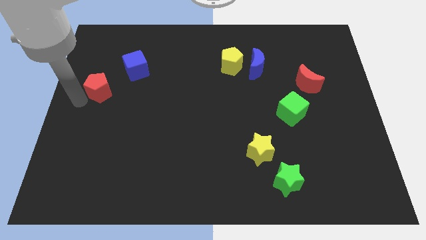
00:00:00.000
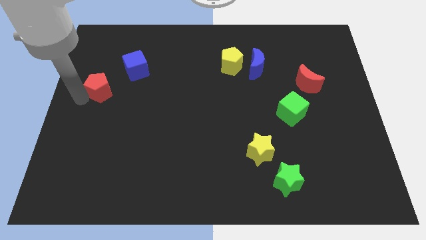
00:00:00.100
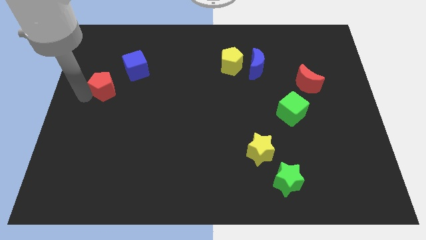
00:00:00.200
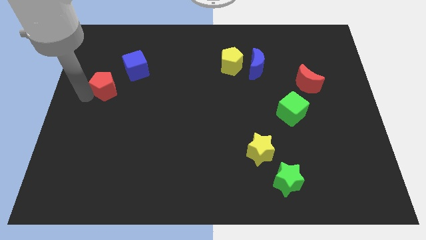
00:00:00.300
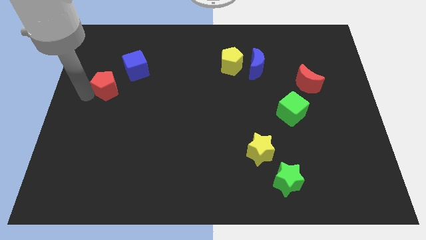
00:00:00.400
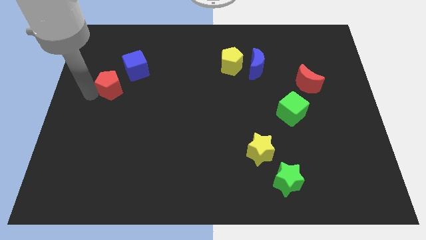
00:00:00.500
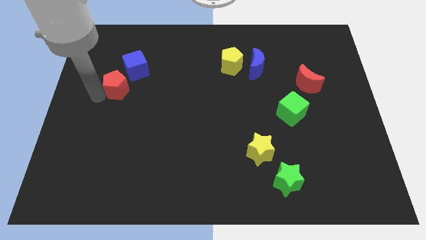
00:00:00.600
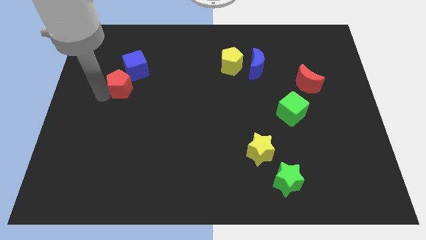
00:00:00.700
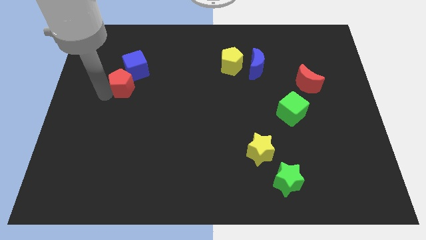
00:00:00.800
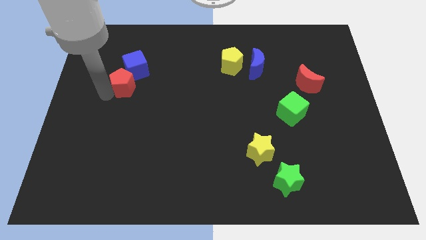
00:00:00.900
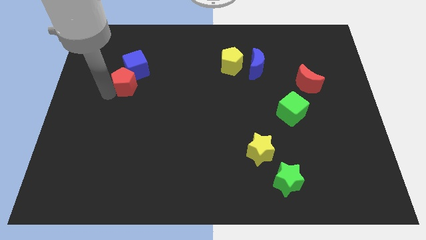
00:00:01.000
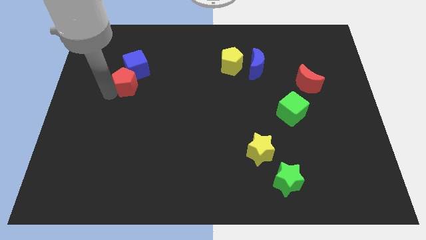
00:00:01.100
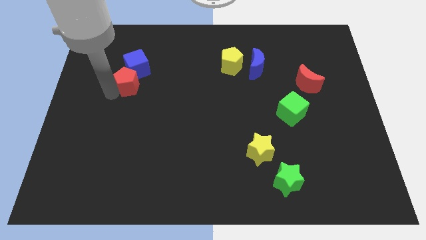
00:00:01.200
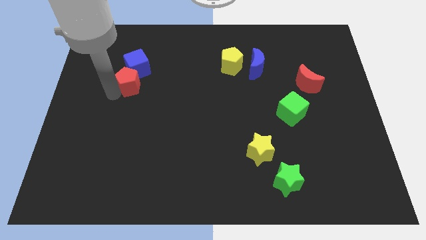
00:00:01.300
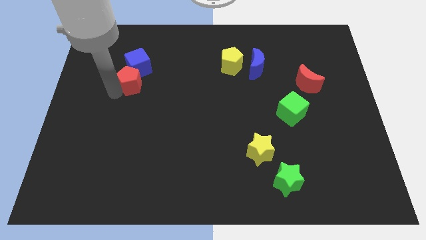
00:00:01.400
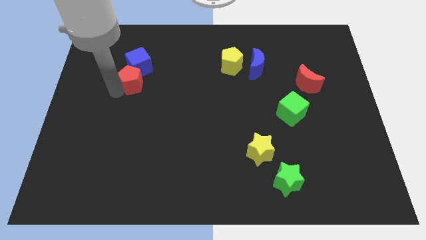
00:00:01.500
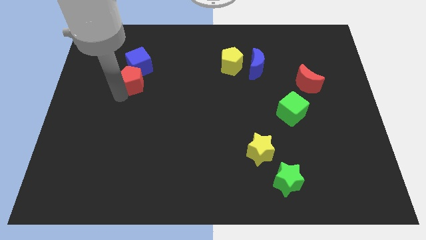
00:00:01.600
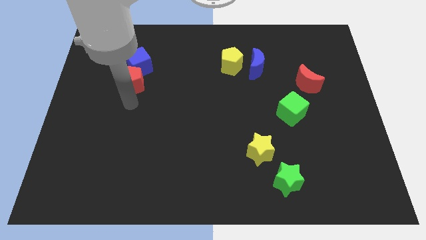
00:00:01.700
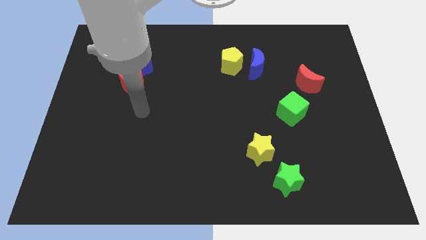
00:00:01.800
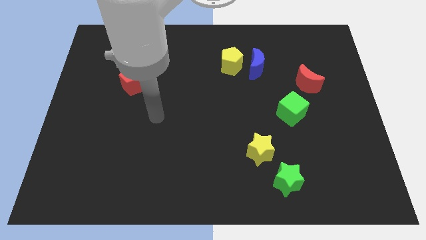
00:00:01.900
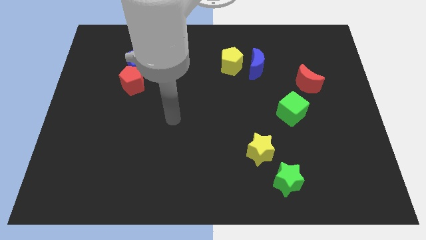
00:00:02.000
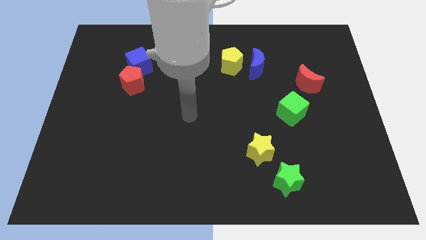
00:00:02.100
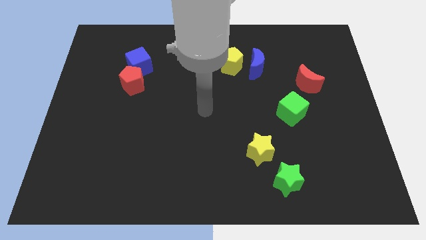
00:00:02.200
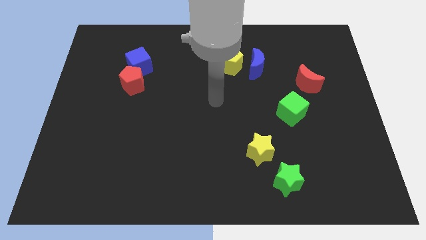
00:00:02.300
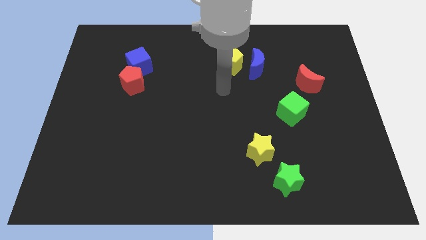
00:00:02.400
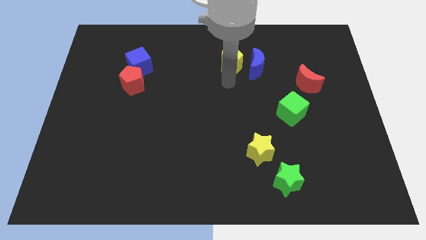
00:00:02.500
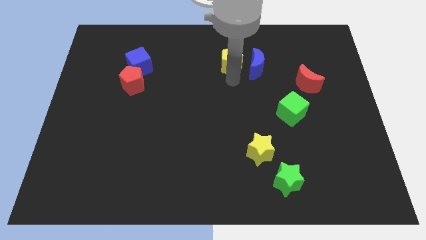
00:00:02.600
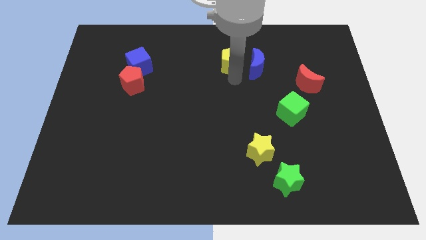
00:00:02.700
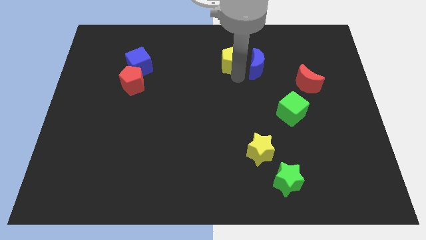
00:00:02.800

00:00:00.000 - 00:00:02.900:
place the arm down to the yellow pentagon

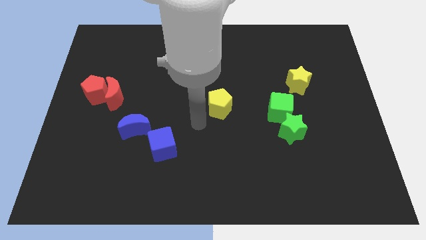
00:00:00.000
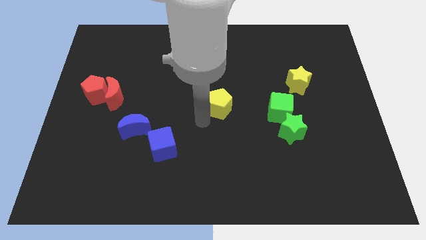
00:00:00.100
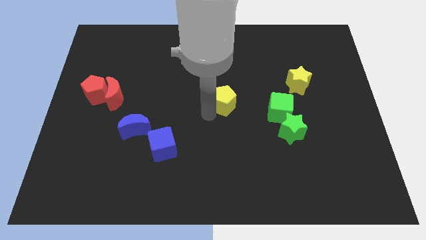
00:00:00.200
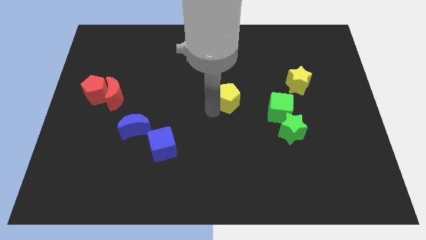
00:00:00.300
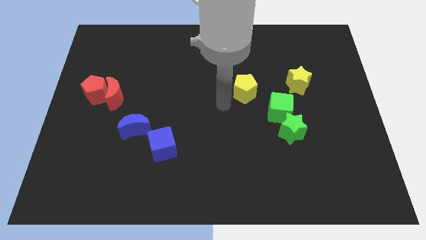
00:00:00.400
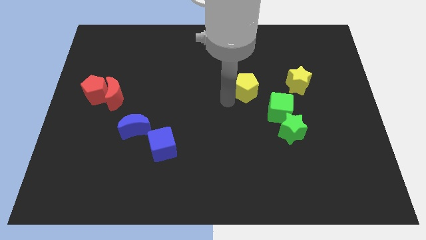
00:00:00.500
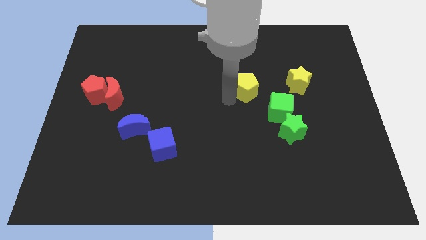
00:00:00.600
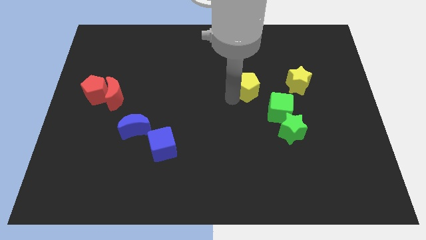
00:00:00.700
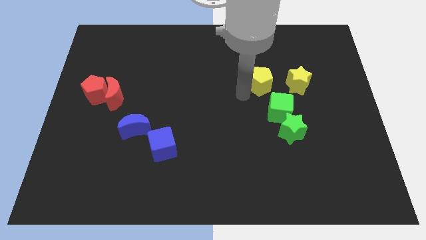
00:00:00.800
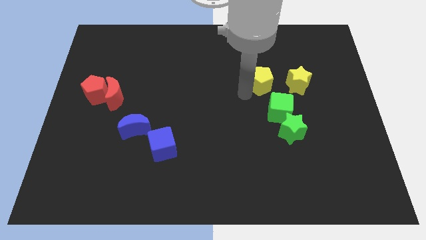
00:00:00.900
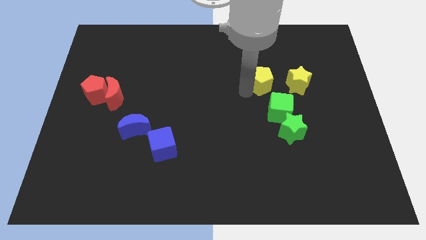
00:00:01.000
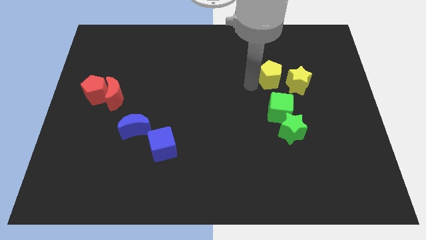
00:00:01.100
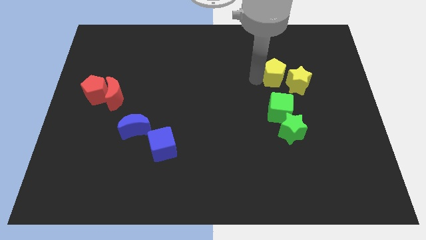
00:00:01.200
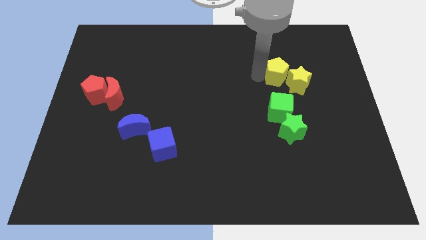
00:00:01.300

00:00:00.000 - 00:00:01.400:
push the yellow pentagon to the top of the green cube

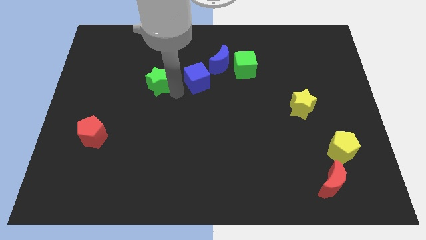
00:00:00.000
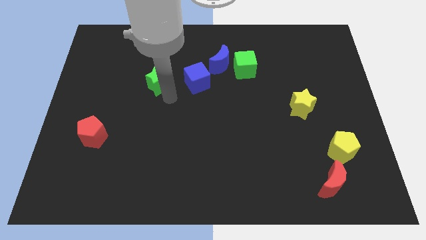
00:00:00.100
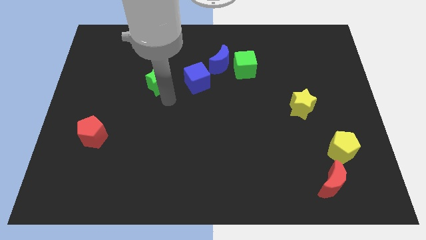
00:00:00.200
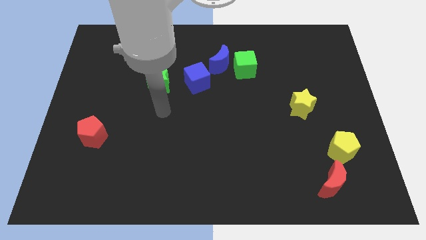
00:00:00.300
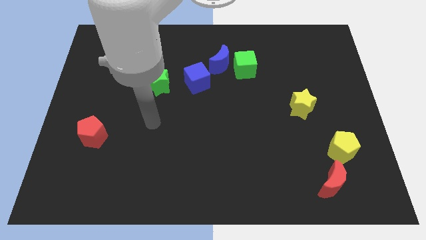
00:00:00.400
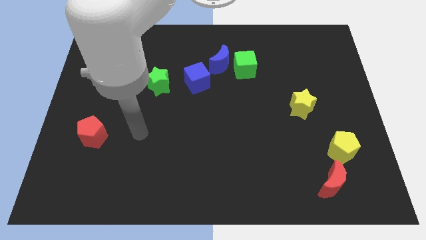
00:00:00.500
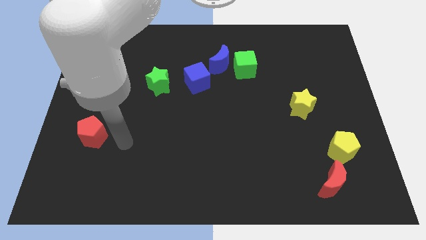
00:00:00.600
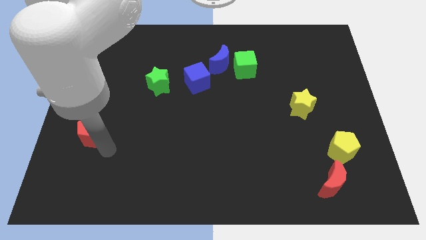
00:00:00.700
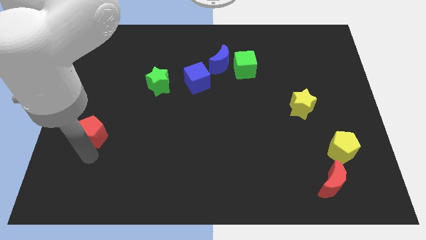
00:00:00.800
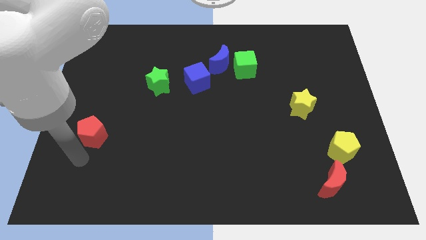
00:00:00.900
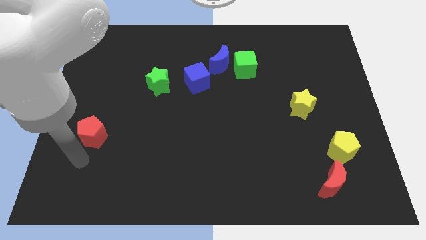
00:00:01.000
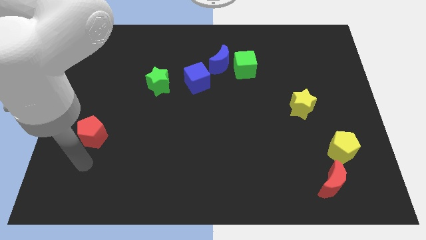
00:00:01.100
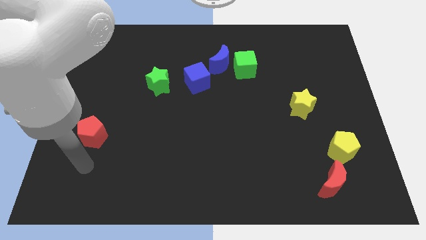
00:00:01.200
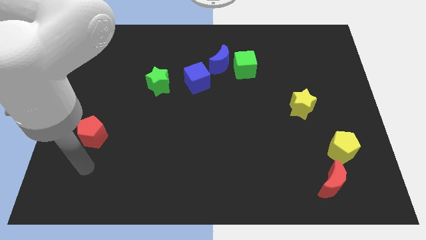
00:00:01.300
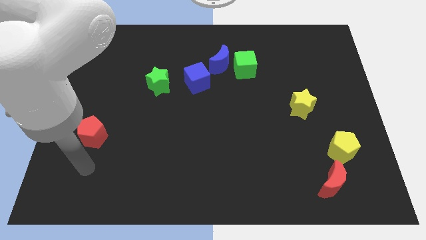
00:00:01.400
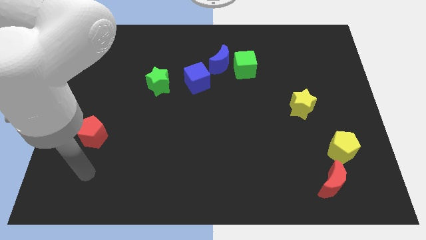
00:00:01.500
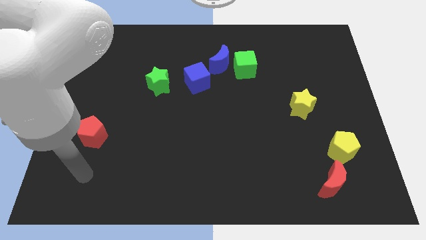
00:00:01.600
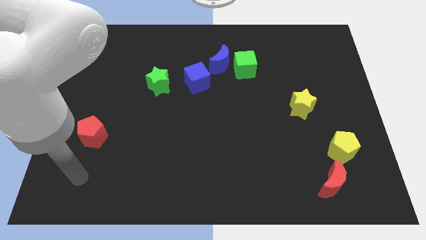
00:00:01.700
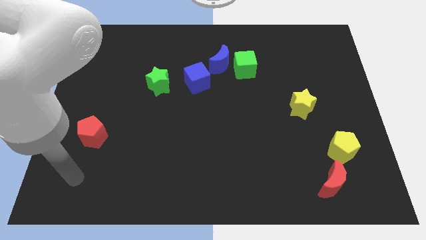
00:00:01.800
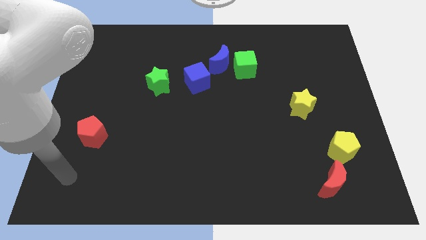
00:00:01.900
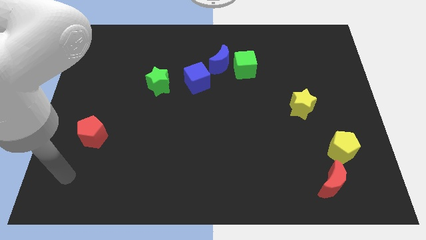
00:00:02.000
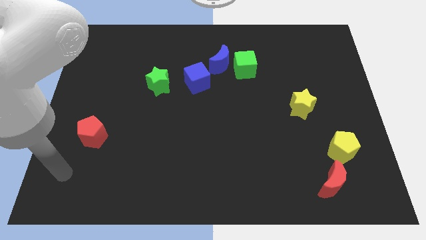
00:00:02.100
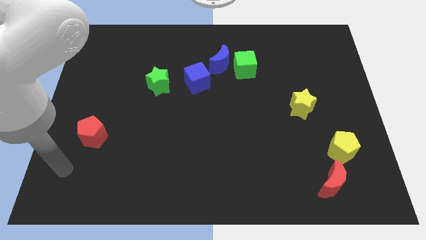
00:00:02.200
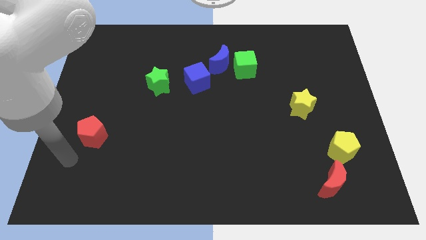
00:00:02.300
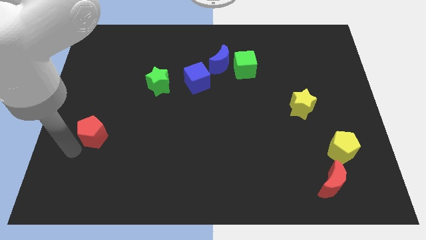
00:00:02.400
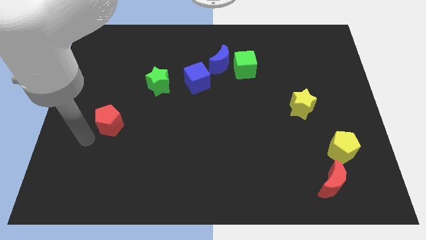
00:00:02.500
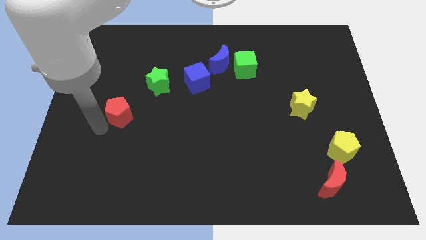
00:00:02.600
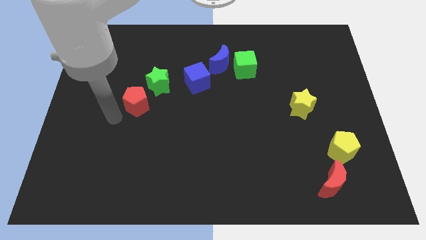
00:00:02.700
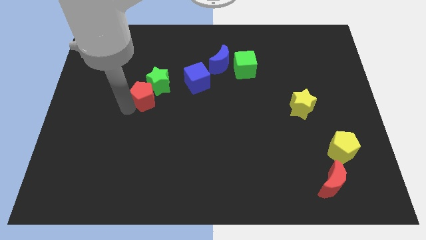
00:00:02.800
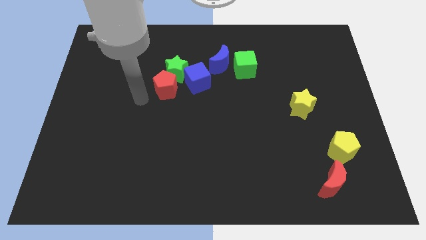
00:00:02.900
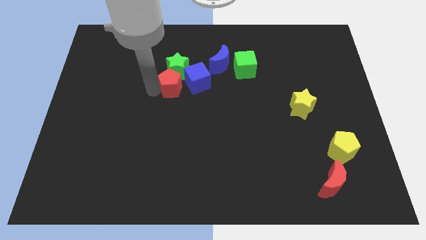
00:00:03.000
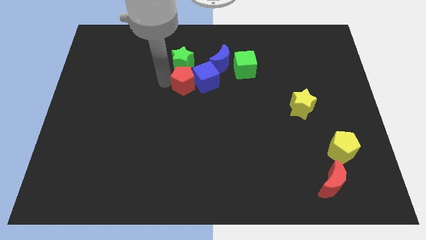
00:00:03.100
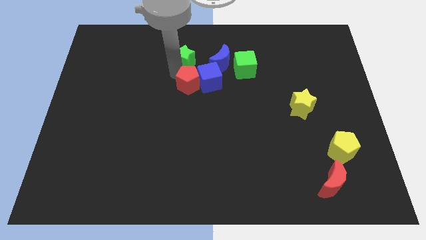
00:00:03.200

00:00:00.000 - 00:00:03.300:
push the red pentagon to the left of the blue cube

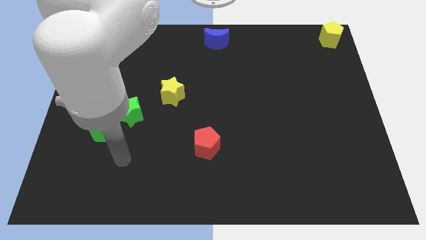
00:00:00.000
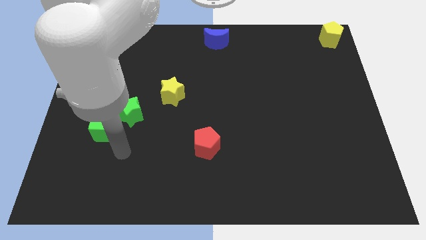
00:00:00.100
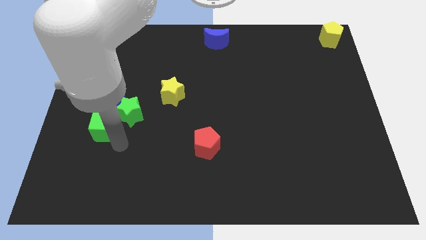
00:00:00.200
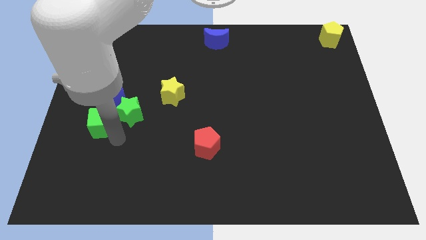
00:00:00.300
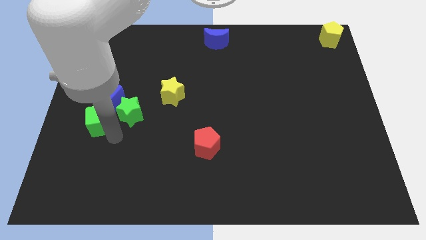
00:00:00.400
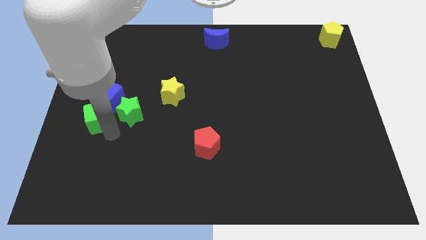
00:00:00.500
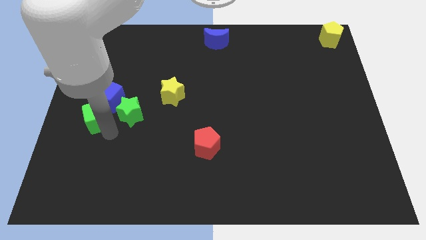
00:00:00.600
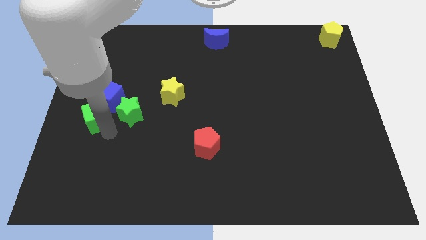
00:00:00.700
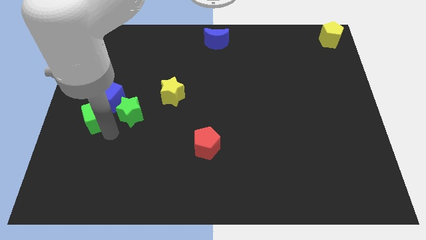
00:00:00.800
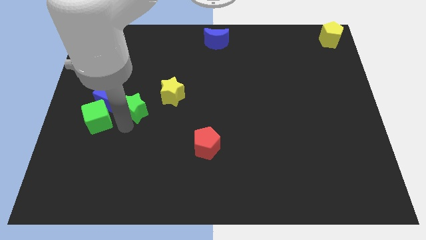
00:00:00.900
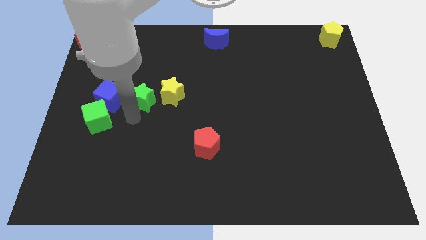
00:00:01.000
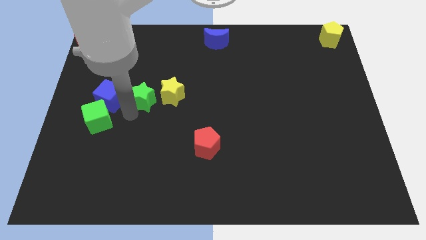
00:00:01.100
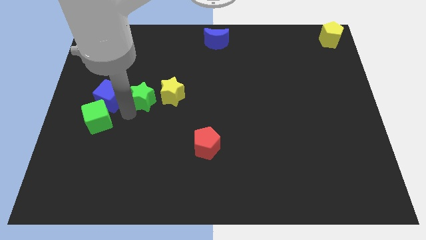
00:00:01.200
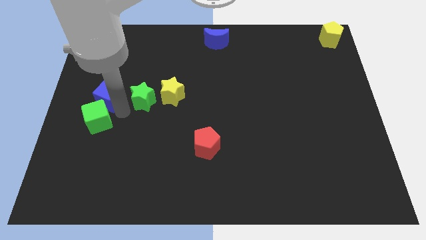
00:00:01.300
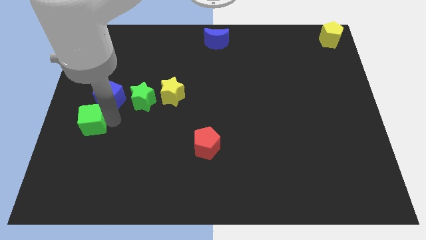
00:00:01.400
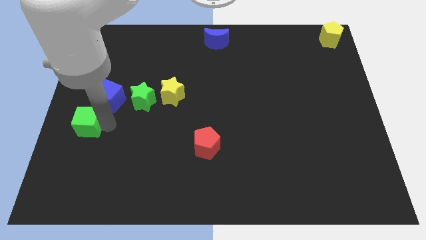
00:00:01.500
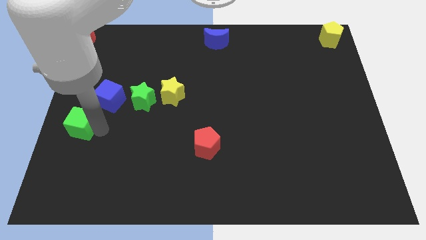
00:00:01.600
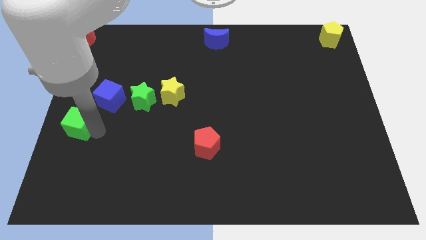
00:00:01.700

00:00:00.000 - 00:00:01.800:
push the green cube to the left of the board
